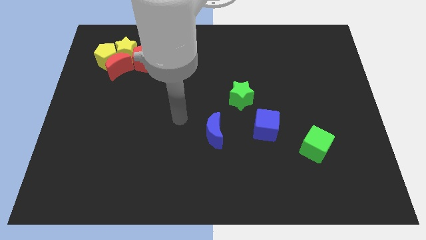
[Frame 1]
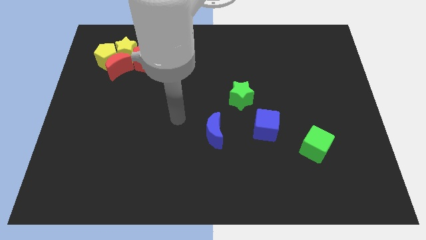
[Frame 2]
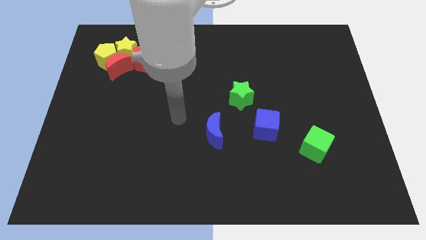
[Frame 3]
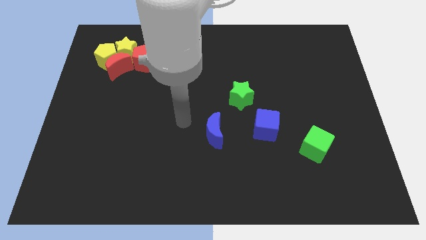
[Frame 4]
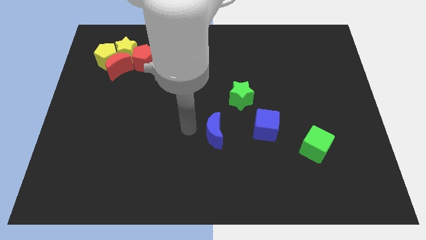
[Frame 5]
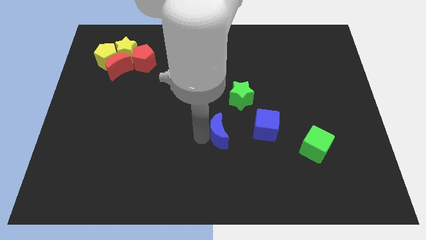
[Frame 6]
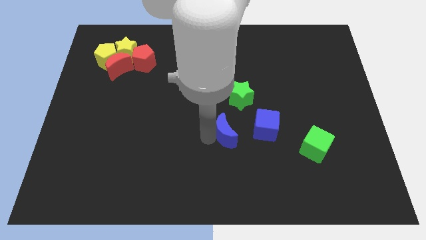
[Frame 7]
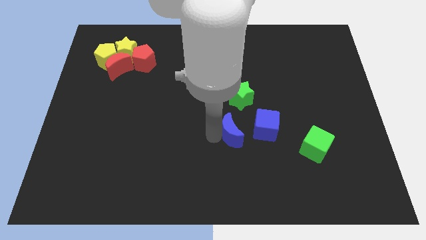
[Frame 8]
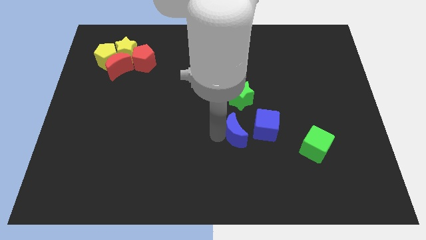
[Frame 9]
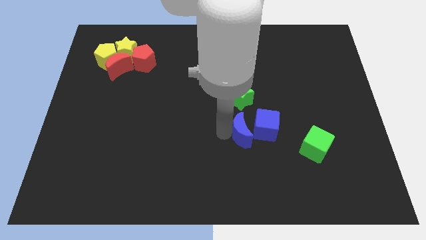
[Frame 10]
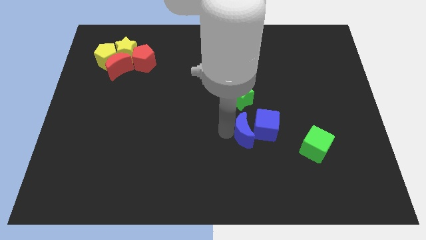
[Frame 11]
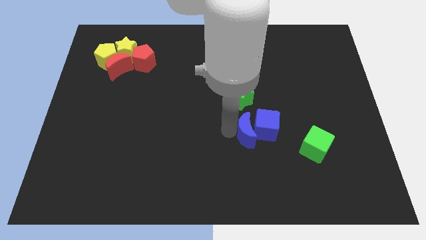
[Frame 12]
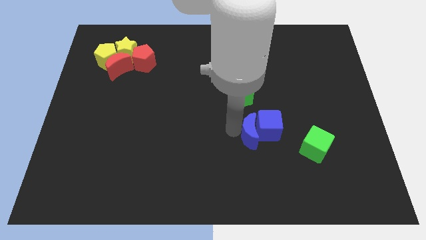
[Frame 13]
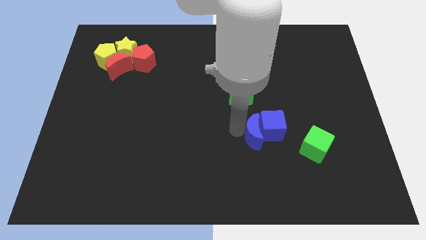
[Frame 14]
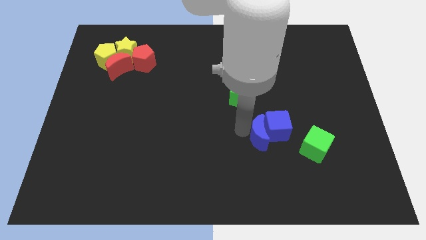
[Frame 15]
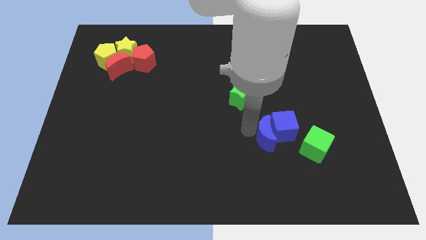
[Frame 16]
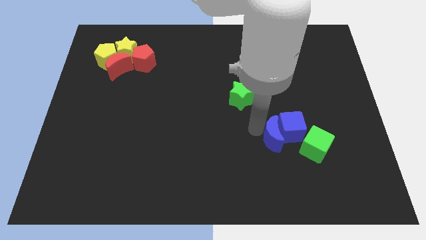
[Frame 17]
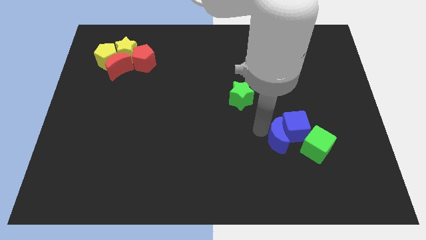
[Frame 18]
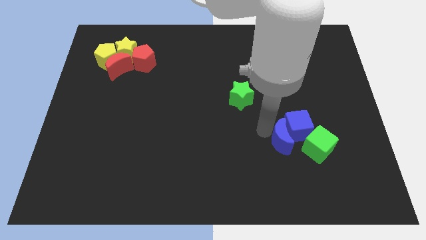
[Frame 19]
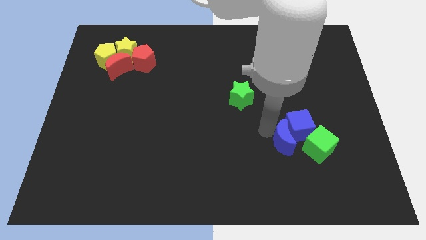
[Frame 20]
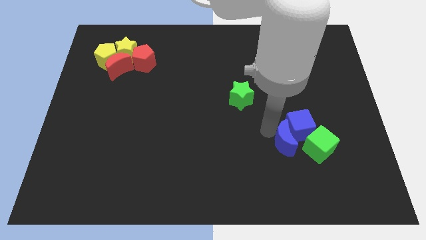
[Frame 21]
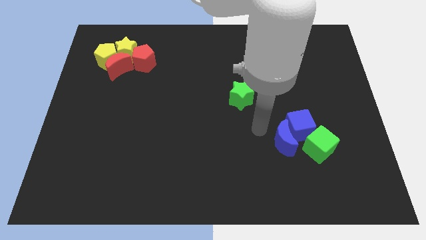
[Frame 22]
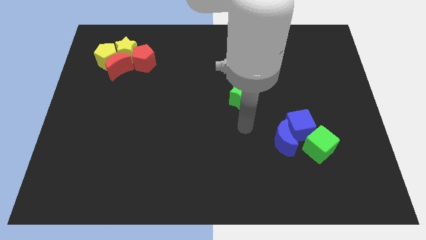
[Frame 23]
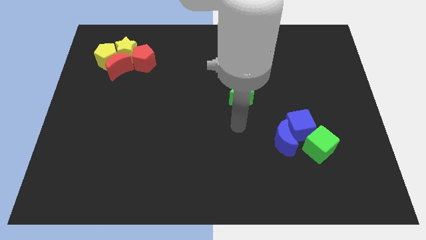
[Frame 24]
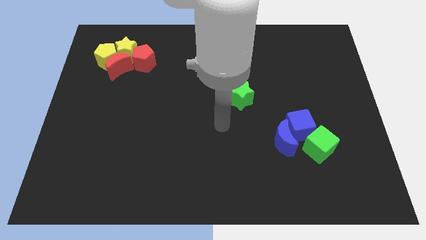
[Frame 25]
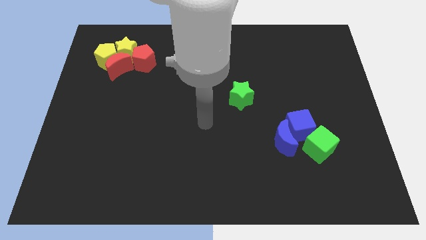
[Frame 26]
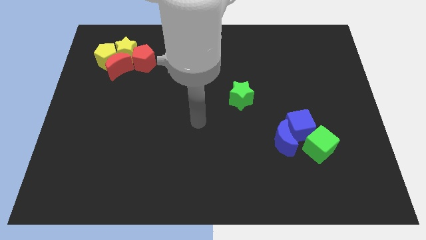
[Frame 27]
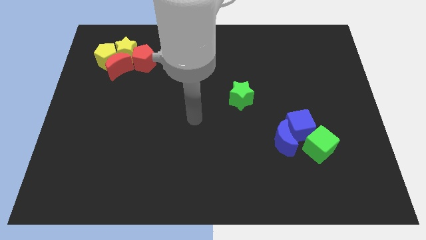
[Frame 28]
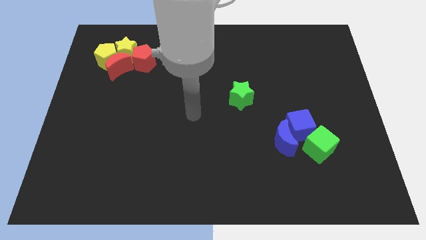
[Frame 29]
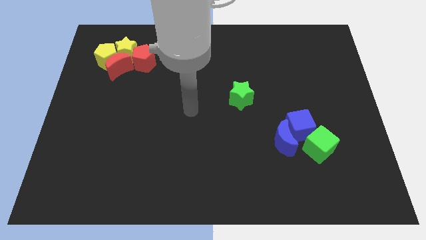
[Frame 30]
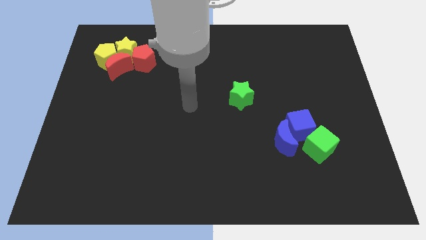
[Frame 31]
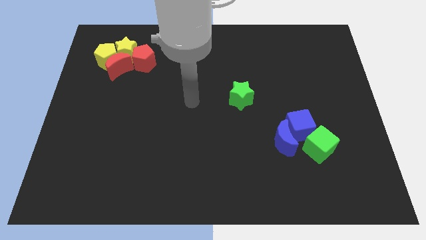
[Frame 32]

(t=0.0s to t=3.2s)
move blue moon and blue cube into green cube

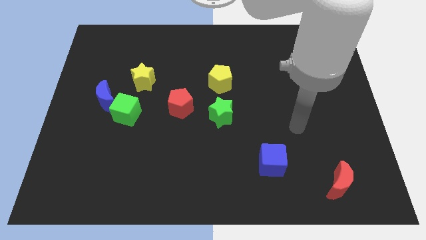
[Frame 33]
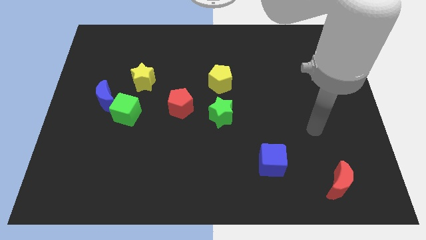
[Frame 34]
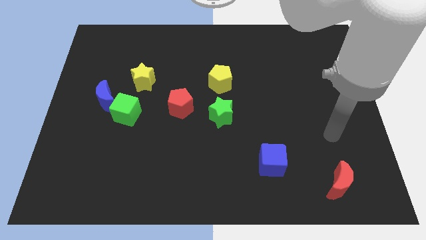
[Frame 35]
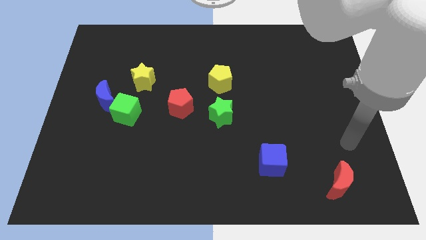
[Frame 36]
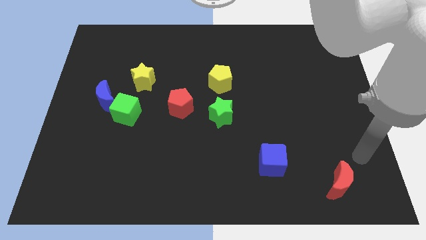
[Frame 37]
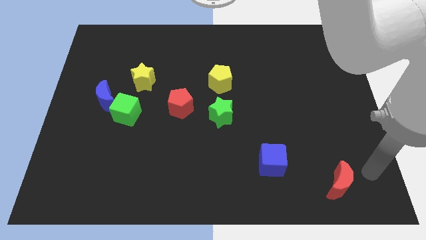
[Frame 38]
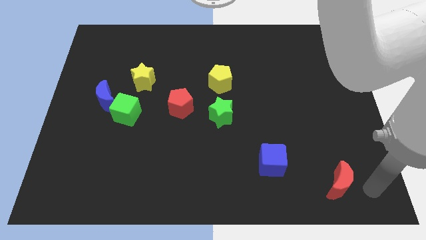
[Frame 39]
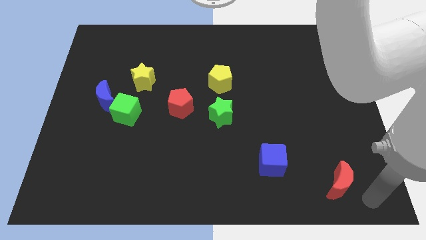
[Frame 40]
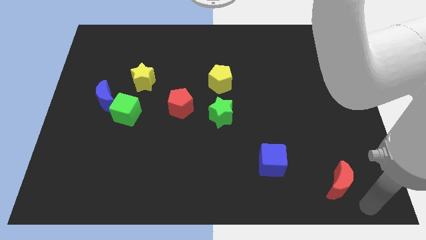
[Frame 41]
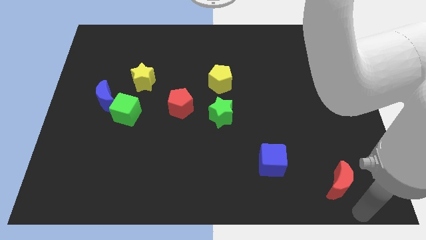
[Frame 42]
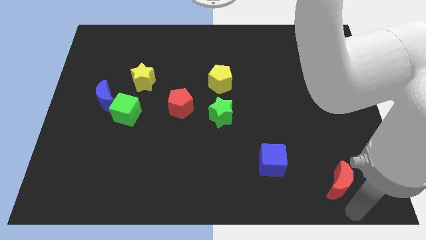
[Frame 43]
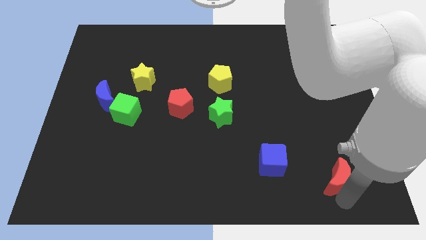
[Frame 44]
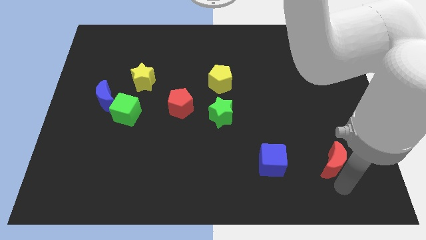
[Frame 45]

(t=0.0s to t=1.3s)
push red moon to the right of blue cube

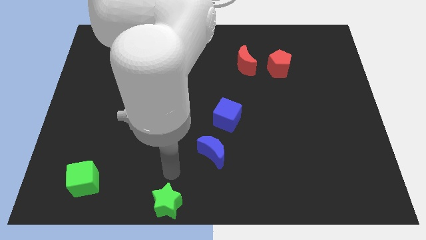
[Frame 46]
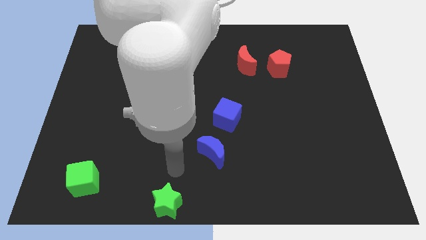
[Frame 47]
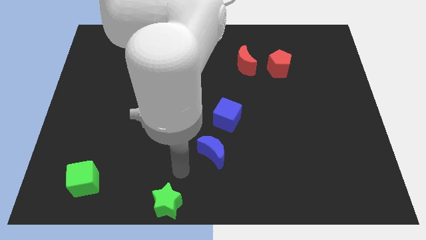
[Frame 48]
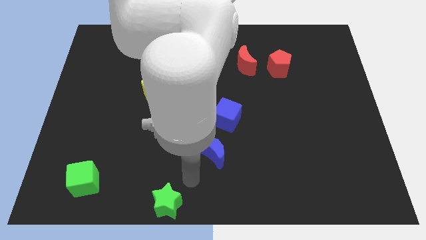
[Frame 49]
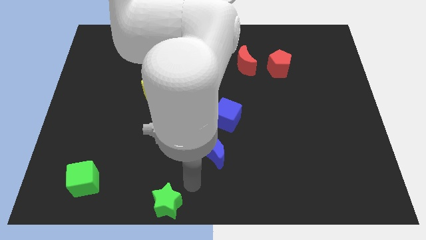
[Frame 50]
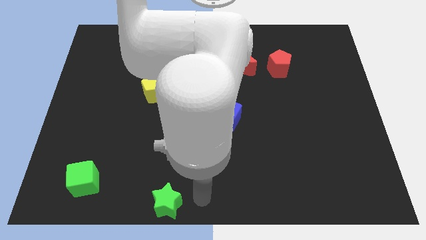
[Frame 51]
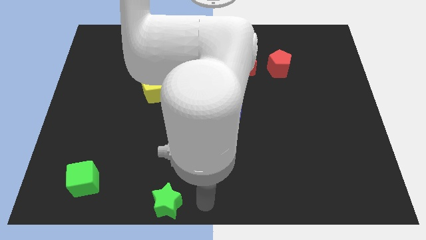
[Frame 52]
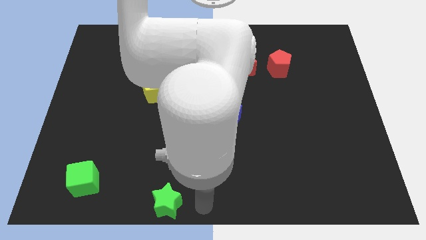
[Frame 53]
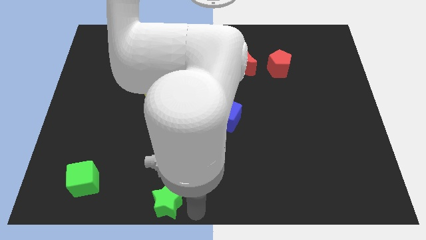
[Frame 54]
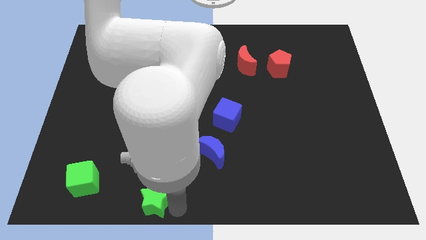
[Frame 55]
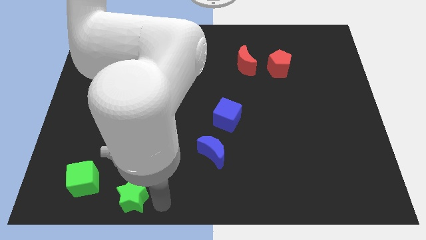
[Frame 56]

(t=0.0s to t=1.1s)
slide green star to the bottom right of green cube

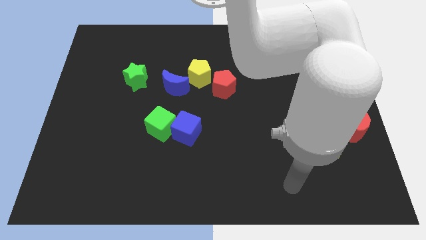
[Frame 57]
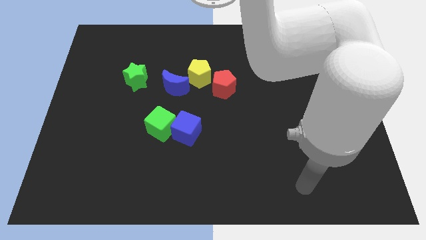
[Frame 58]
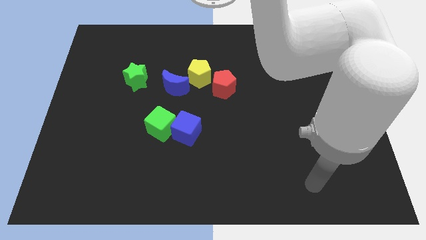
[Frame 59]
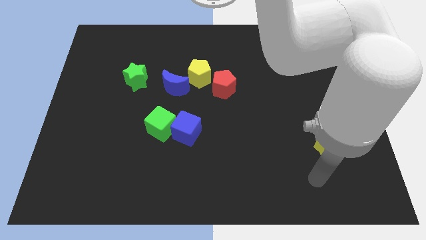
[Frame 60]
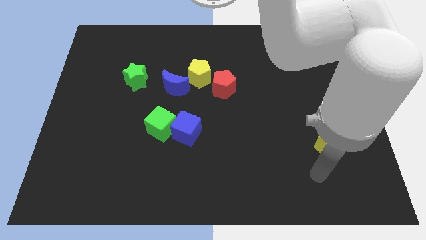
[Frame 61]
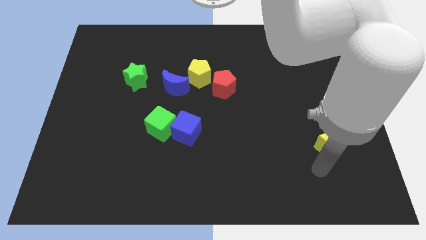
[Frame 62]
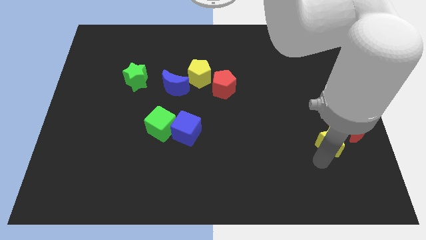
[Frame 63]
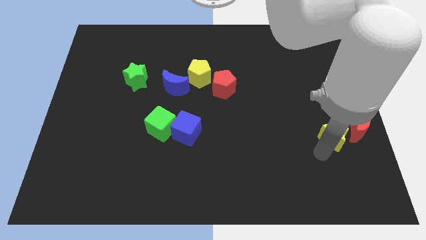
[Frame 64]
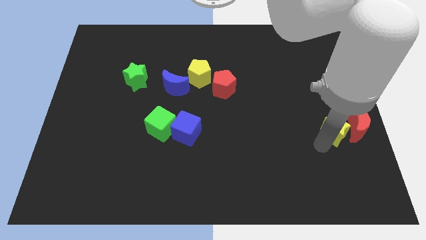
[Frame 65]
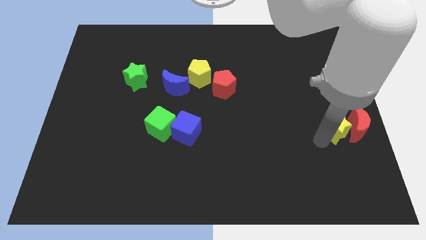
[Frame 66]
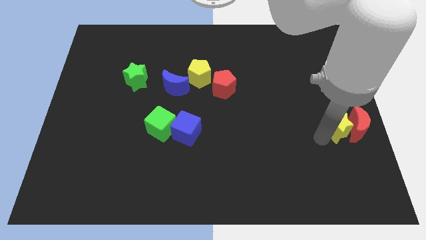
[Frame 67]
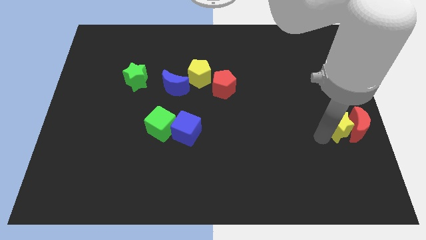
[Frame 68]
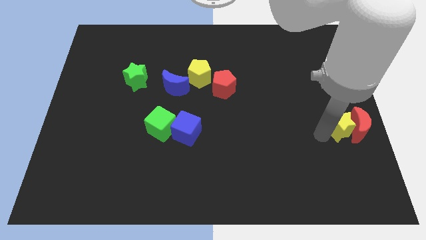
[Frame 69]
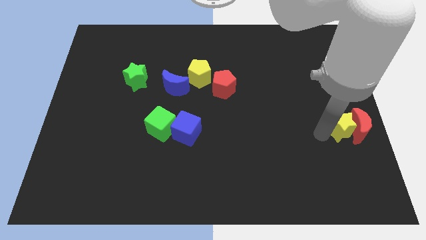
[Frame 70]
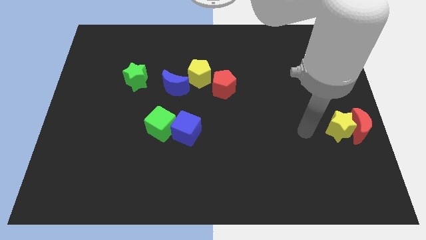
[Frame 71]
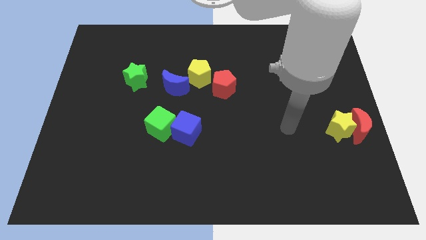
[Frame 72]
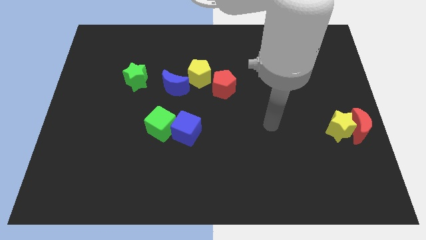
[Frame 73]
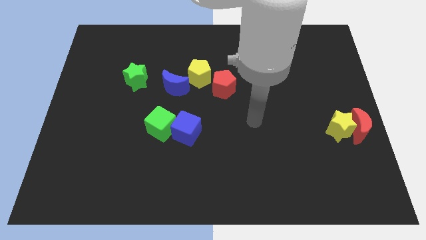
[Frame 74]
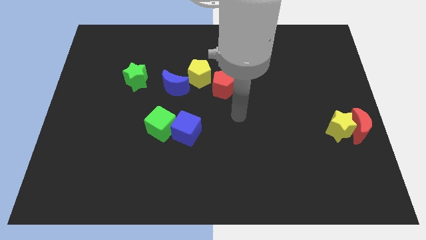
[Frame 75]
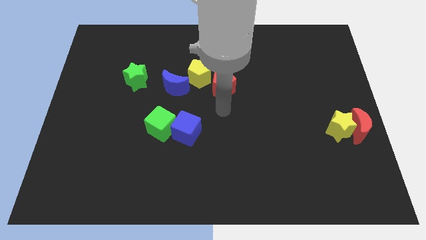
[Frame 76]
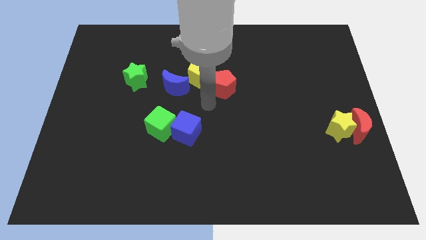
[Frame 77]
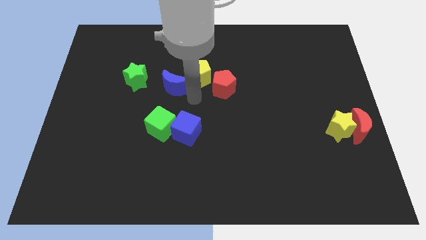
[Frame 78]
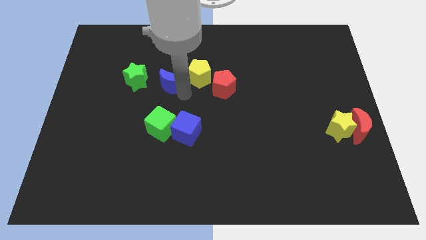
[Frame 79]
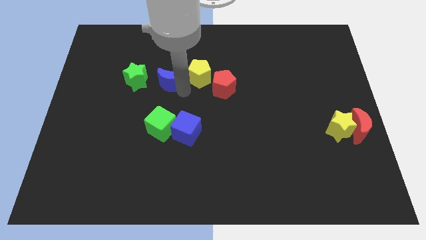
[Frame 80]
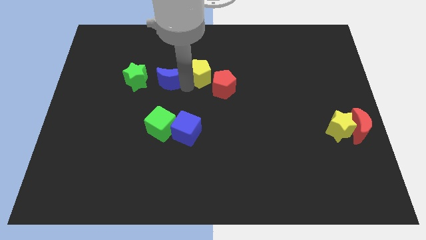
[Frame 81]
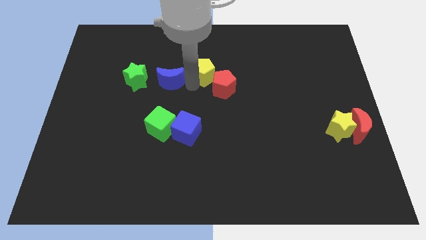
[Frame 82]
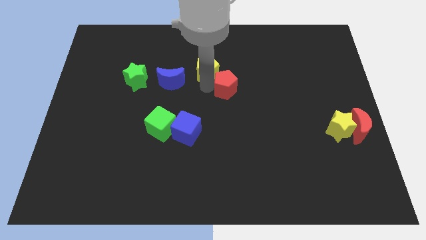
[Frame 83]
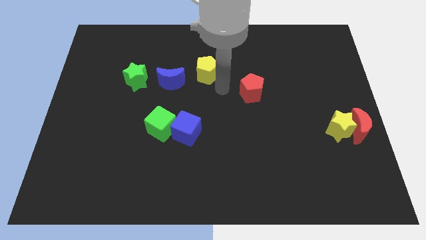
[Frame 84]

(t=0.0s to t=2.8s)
separate yellow pentagon and red pentagon

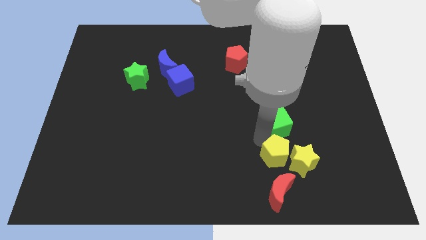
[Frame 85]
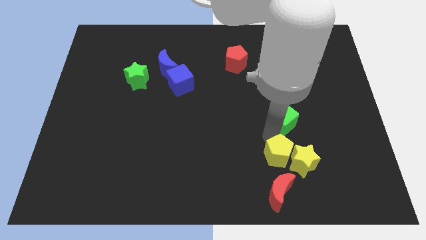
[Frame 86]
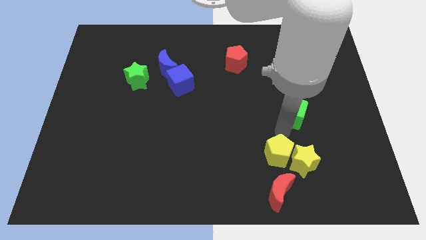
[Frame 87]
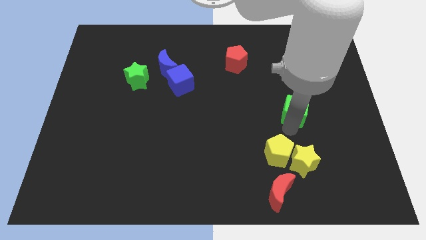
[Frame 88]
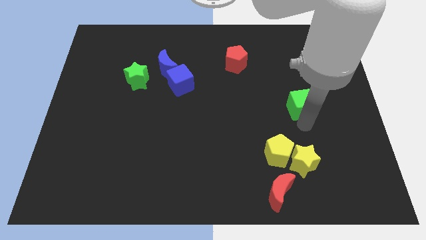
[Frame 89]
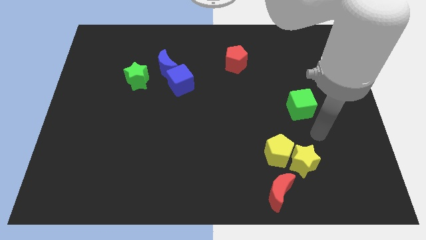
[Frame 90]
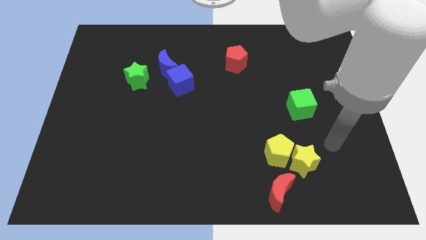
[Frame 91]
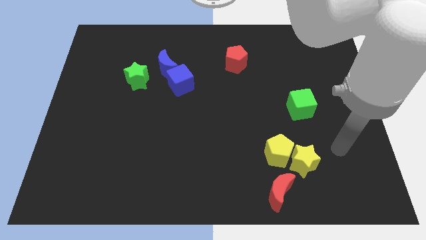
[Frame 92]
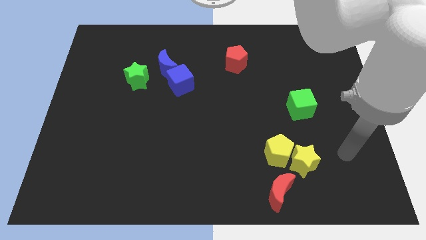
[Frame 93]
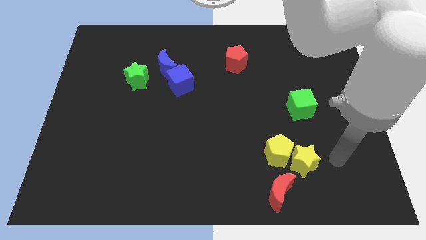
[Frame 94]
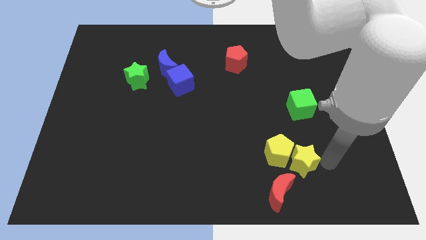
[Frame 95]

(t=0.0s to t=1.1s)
place the arm right to the yellow star
